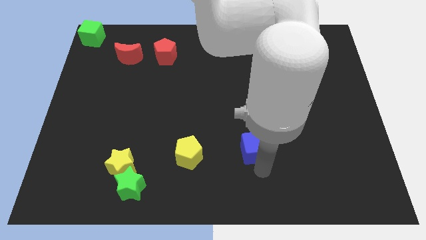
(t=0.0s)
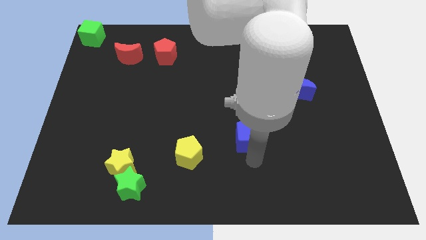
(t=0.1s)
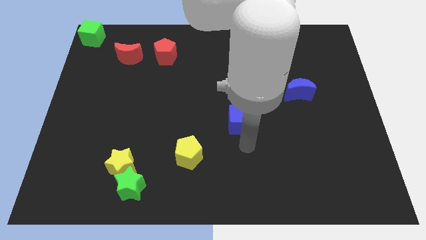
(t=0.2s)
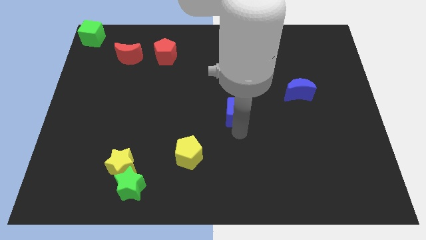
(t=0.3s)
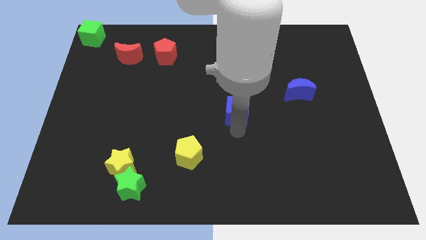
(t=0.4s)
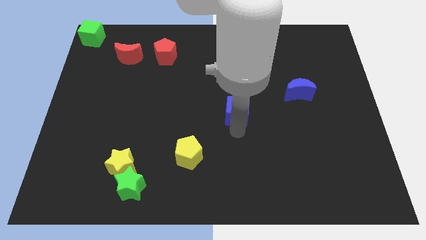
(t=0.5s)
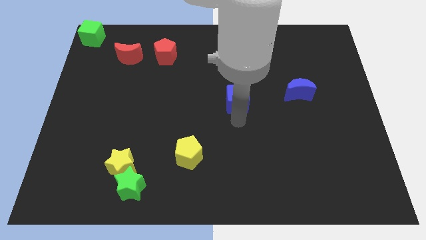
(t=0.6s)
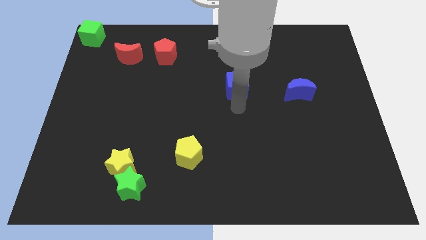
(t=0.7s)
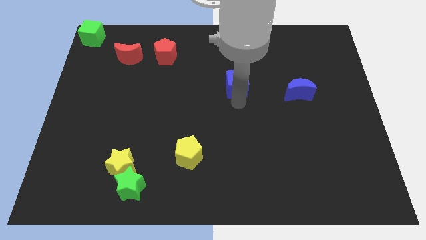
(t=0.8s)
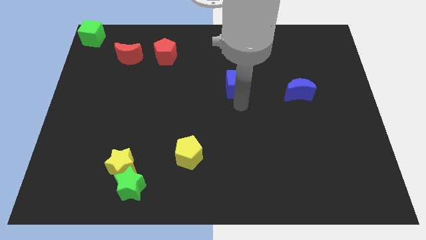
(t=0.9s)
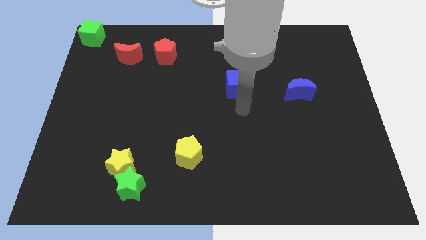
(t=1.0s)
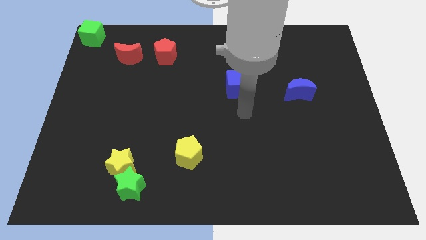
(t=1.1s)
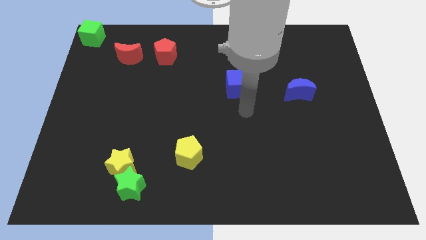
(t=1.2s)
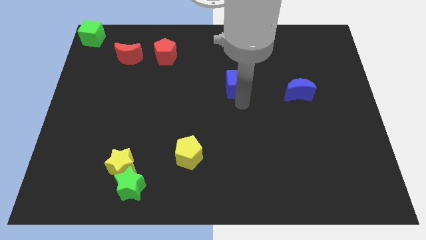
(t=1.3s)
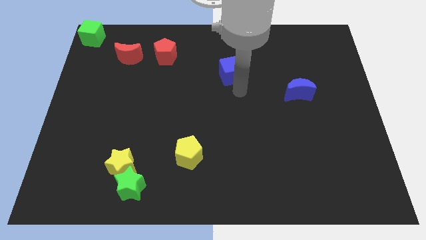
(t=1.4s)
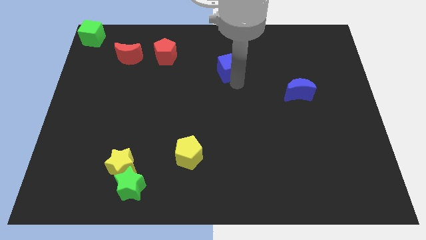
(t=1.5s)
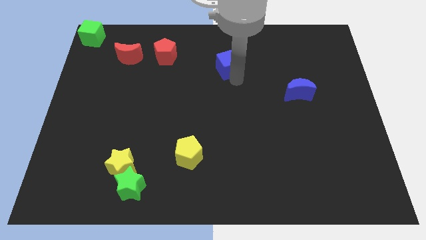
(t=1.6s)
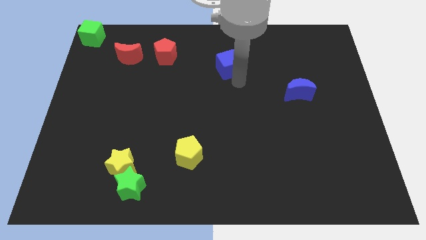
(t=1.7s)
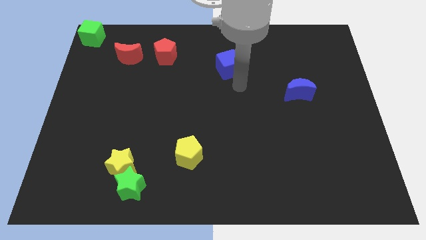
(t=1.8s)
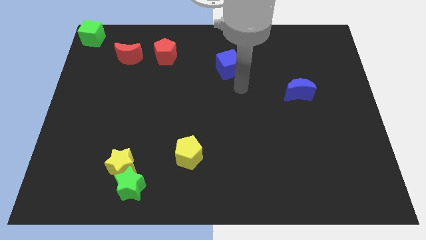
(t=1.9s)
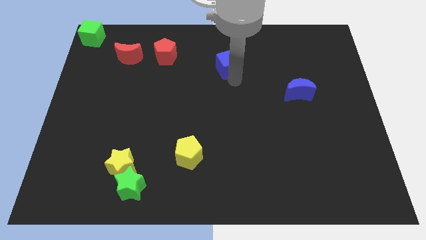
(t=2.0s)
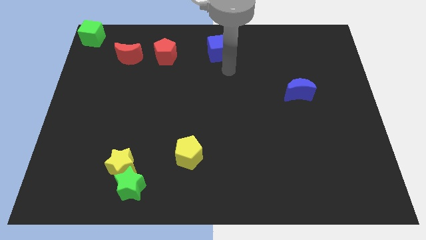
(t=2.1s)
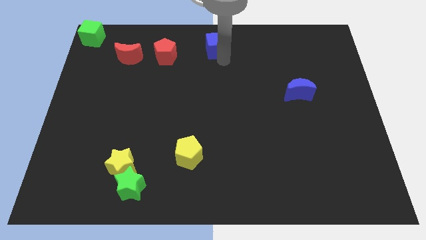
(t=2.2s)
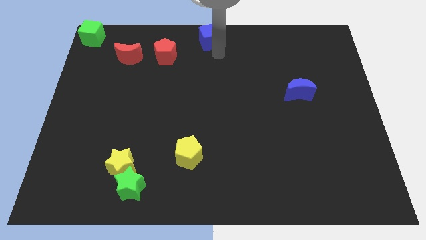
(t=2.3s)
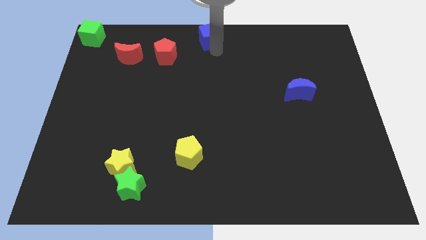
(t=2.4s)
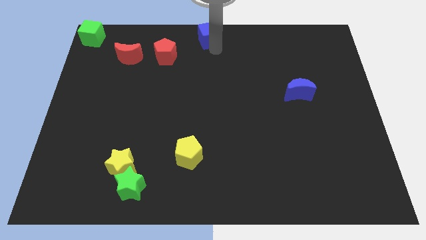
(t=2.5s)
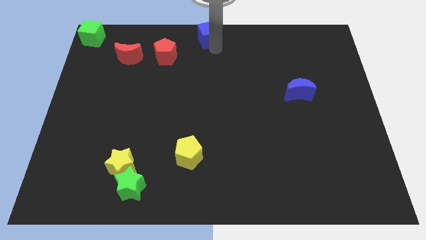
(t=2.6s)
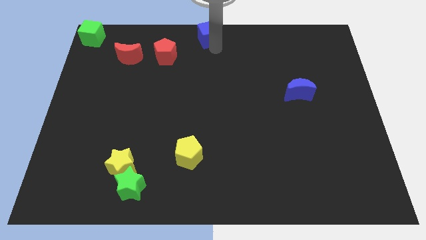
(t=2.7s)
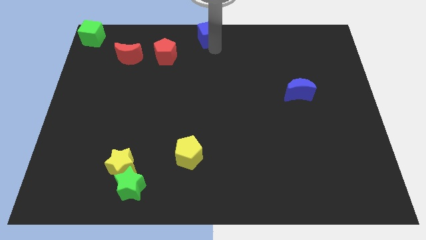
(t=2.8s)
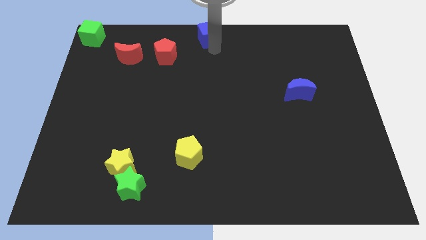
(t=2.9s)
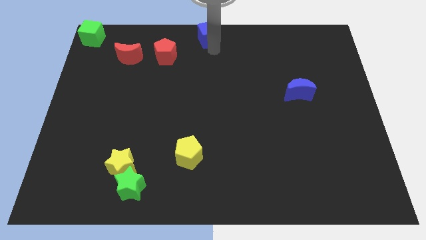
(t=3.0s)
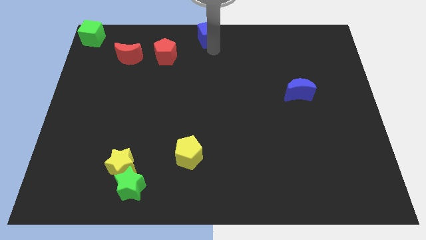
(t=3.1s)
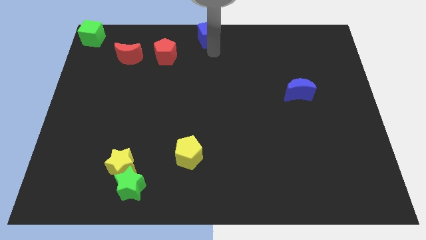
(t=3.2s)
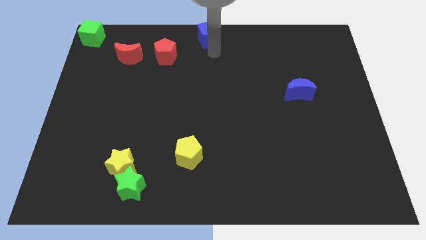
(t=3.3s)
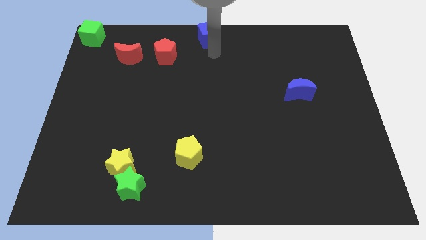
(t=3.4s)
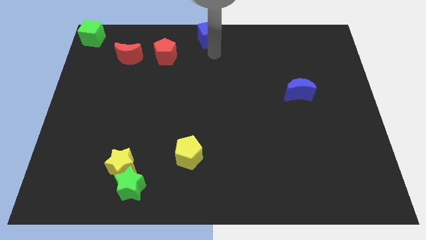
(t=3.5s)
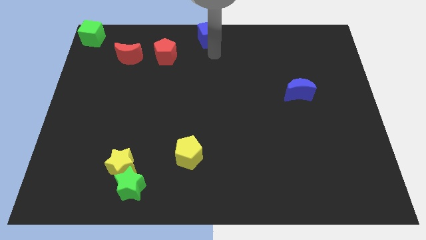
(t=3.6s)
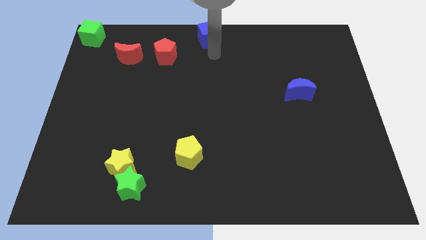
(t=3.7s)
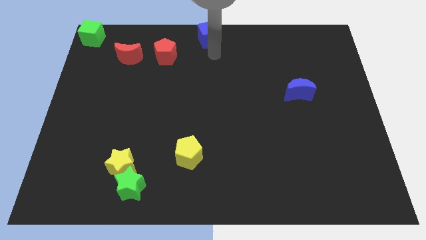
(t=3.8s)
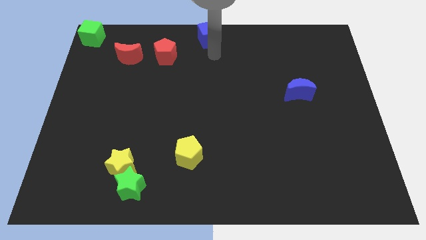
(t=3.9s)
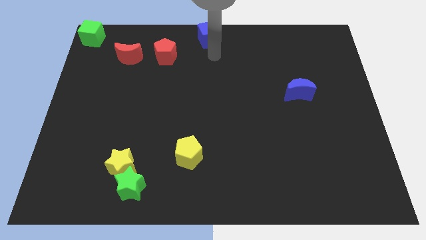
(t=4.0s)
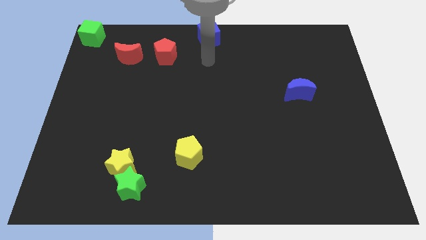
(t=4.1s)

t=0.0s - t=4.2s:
move blue cube to the top middle of the board

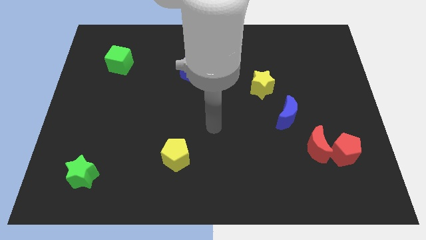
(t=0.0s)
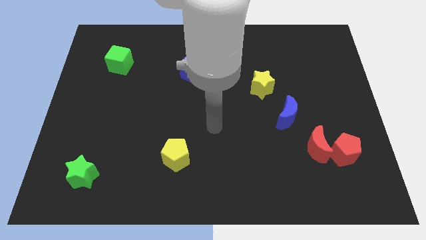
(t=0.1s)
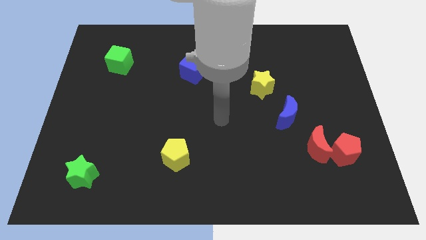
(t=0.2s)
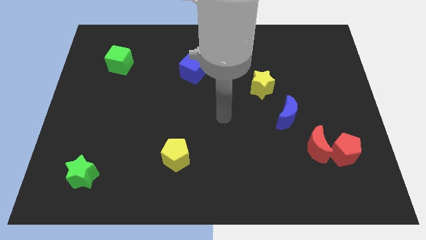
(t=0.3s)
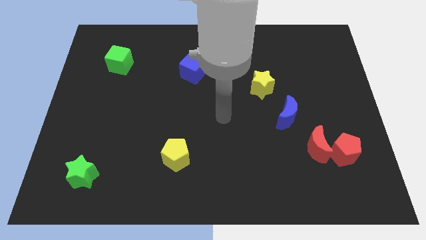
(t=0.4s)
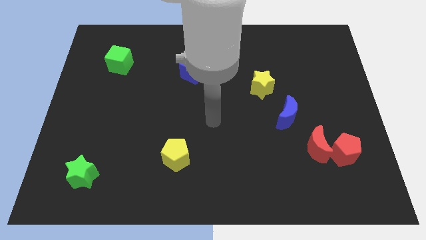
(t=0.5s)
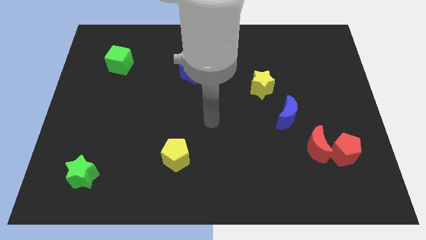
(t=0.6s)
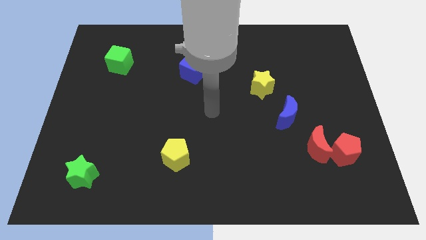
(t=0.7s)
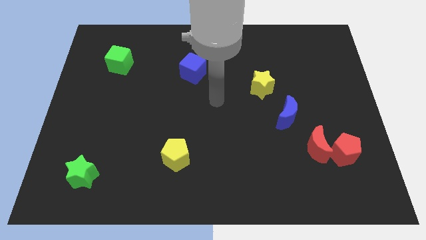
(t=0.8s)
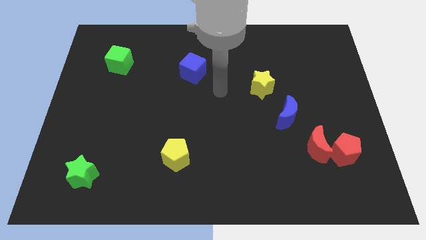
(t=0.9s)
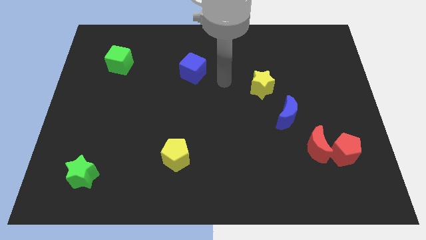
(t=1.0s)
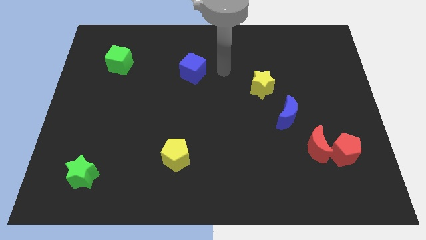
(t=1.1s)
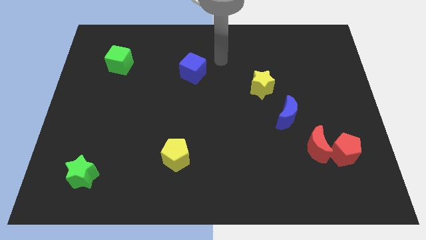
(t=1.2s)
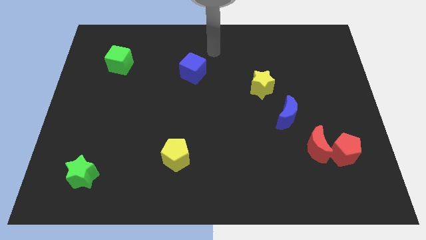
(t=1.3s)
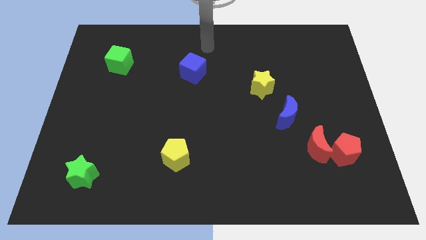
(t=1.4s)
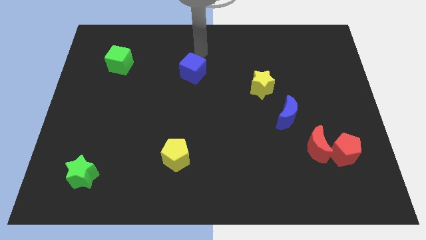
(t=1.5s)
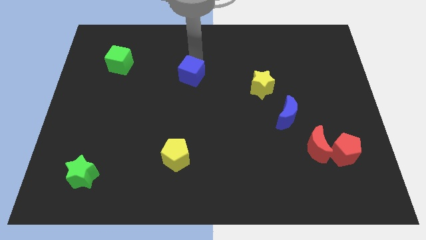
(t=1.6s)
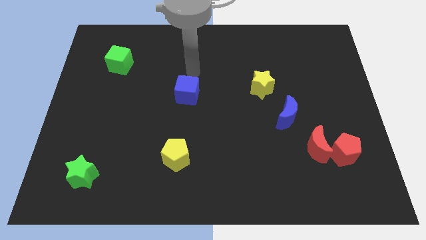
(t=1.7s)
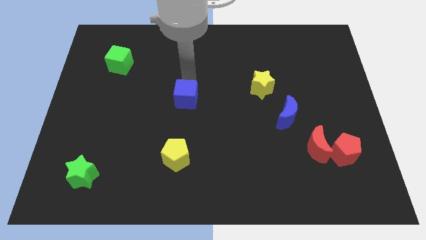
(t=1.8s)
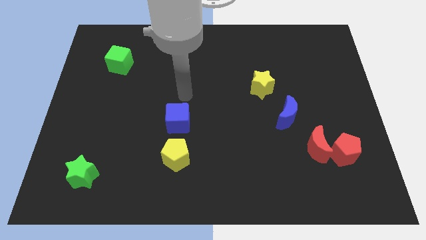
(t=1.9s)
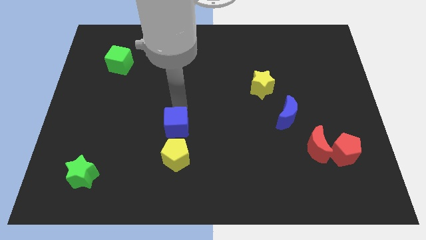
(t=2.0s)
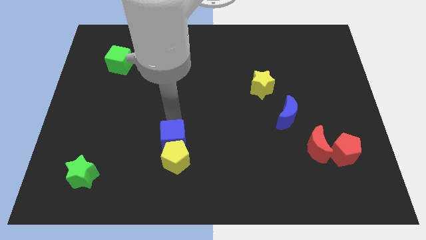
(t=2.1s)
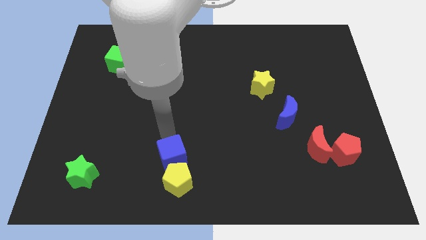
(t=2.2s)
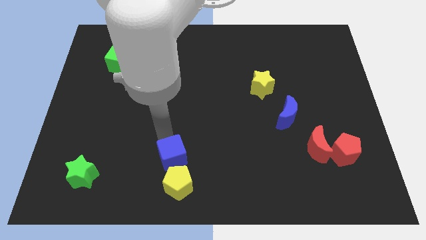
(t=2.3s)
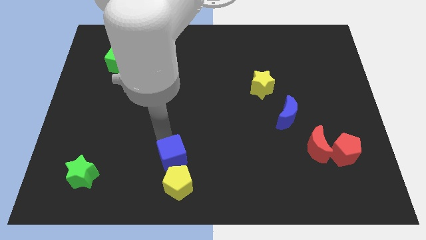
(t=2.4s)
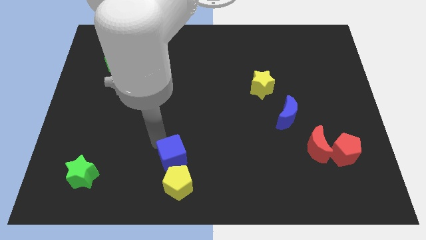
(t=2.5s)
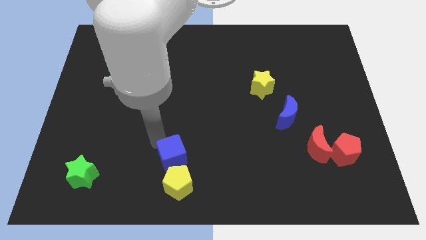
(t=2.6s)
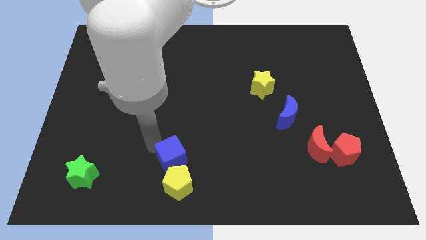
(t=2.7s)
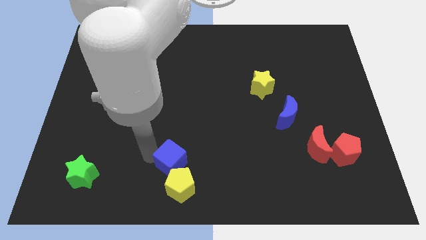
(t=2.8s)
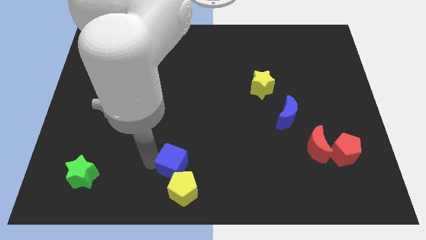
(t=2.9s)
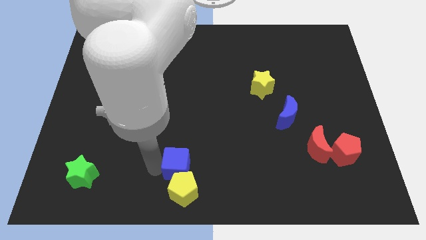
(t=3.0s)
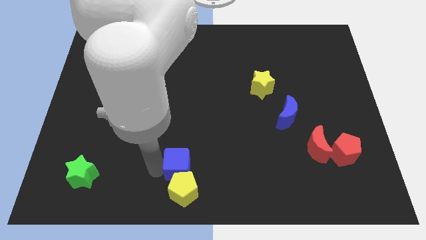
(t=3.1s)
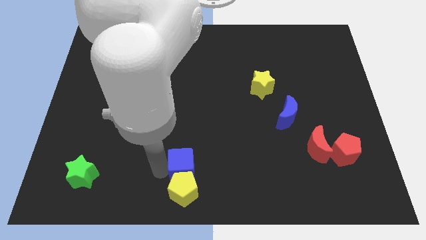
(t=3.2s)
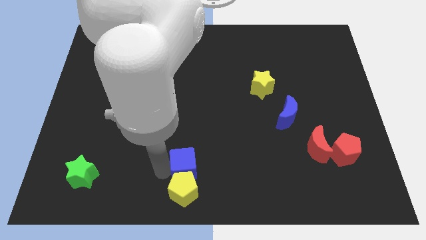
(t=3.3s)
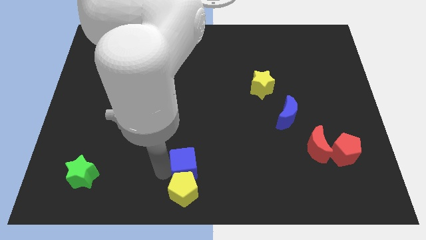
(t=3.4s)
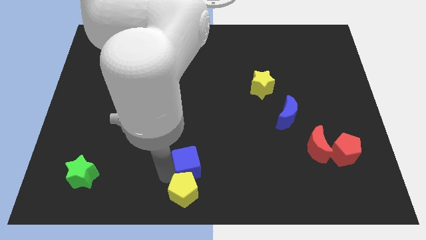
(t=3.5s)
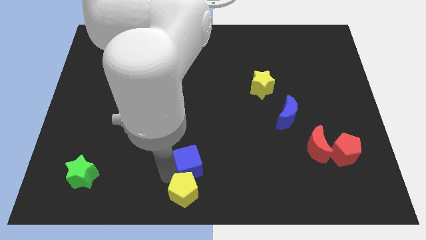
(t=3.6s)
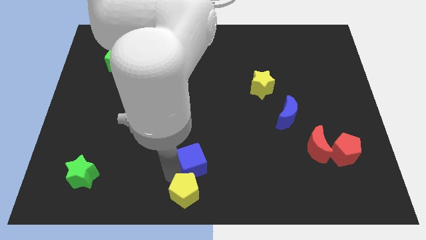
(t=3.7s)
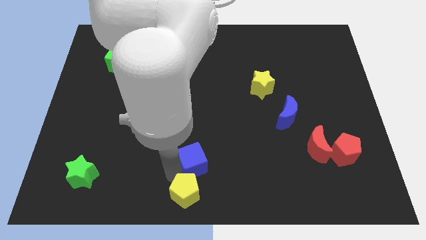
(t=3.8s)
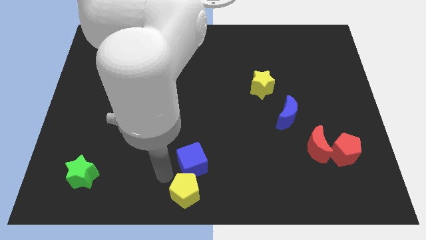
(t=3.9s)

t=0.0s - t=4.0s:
push the blue cube into the yellow pentagon

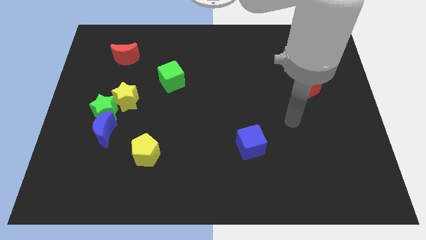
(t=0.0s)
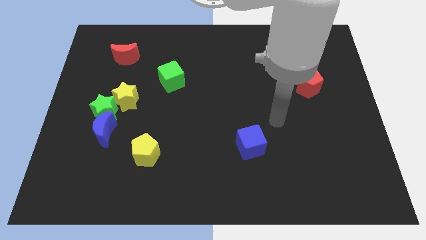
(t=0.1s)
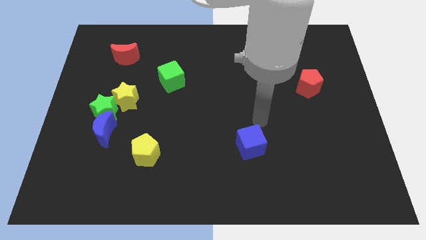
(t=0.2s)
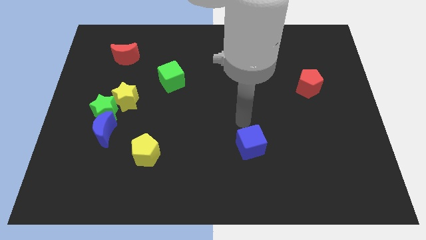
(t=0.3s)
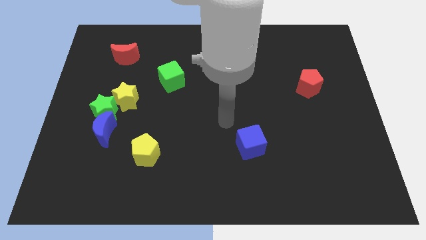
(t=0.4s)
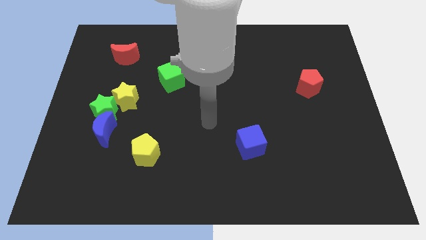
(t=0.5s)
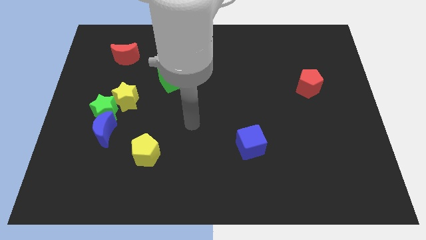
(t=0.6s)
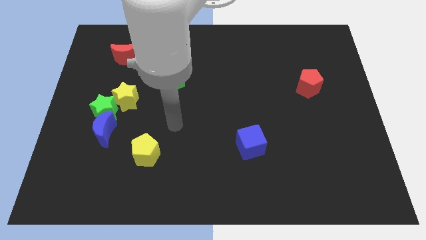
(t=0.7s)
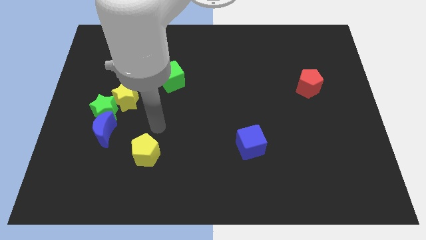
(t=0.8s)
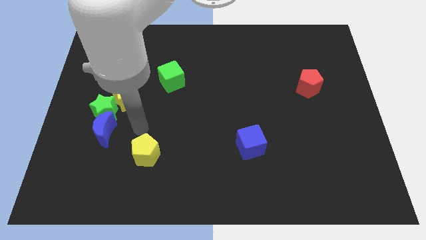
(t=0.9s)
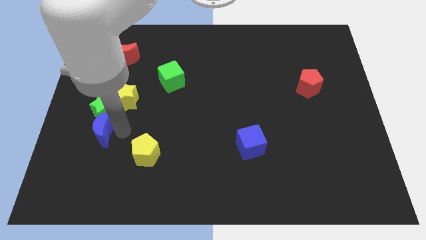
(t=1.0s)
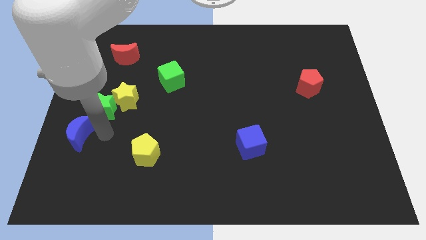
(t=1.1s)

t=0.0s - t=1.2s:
place your arm to the right of the blue moon
